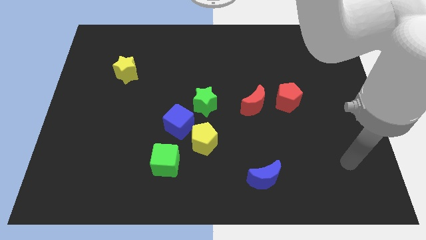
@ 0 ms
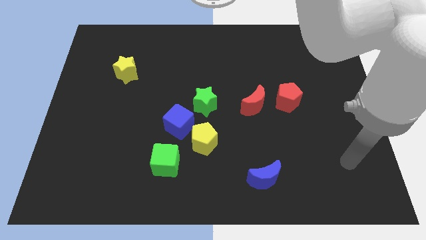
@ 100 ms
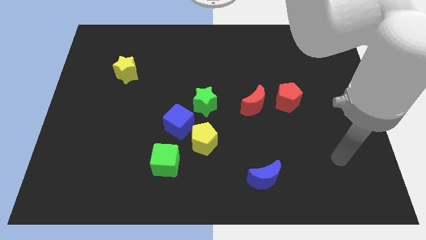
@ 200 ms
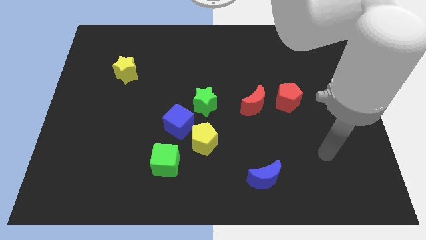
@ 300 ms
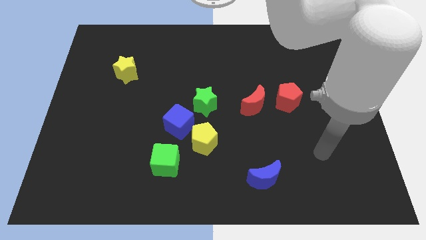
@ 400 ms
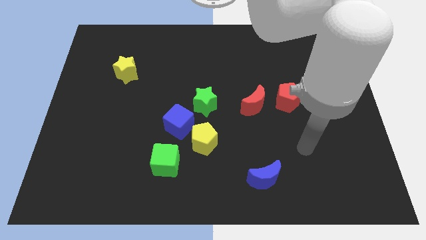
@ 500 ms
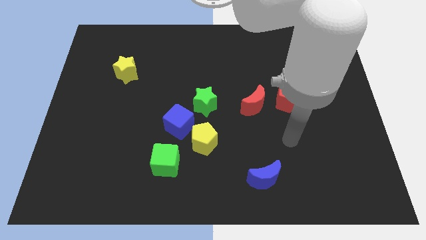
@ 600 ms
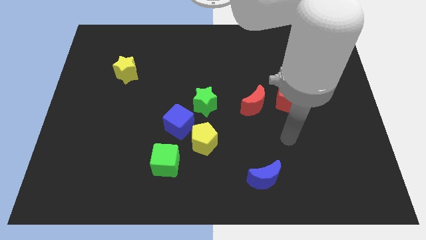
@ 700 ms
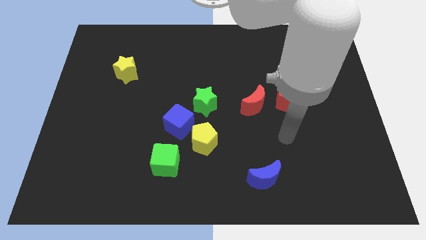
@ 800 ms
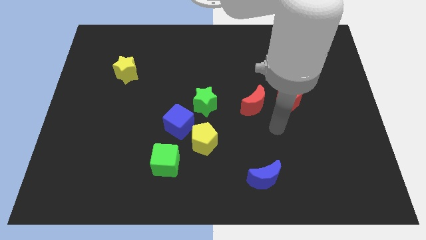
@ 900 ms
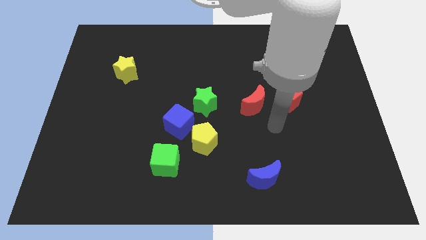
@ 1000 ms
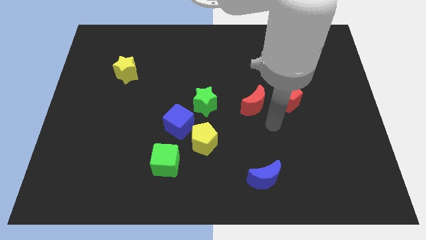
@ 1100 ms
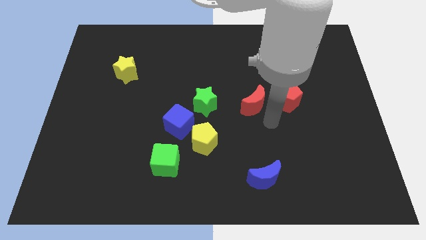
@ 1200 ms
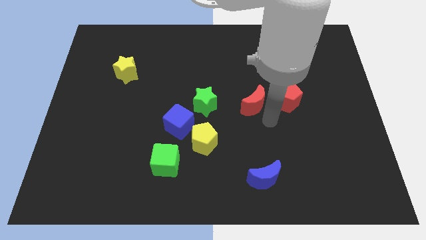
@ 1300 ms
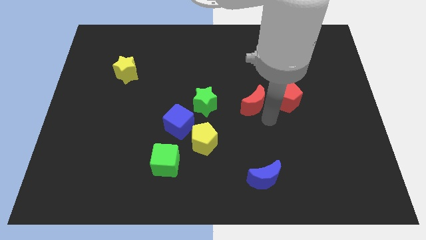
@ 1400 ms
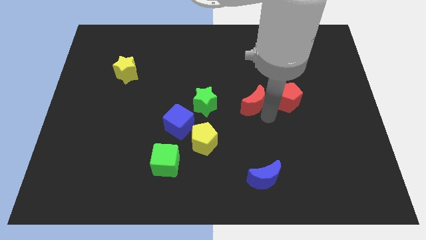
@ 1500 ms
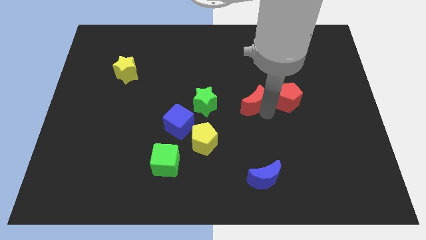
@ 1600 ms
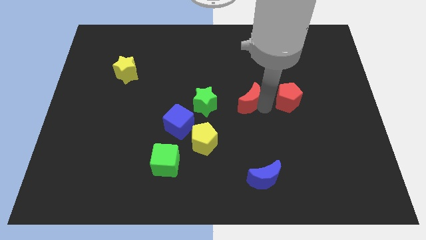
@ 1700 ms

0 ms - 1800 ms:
move your arm to the right of red moon

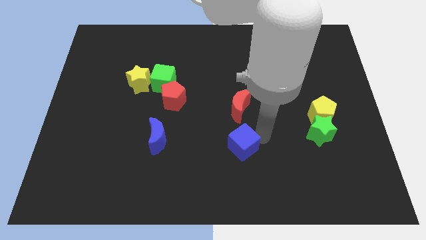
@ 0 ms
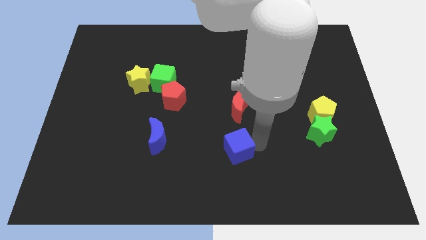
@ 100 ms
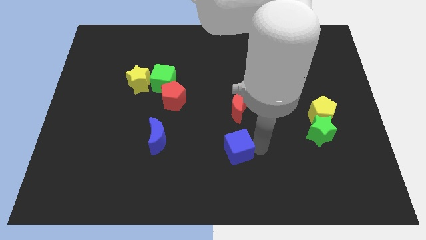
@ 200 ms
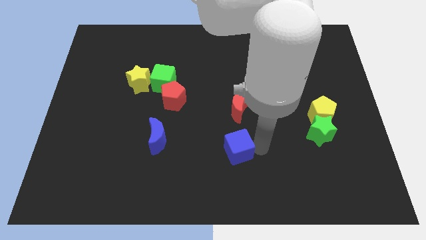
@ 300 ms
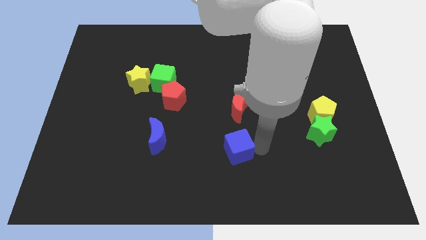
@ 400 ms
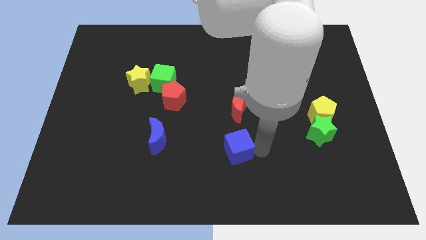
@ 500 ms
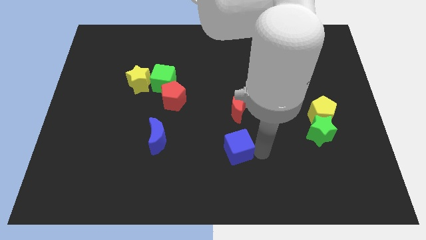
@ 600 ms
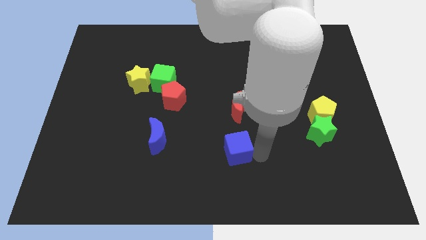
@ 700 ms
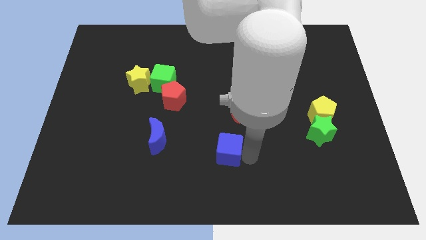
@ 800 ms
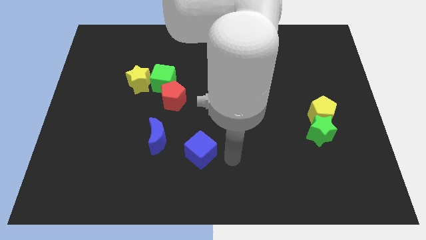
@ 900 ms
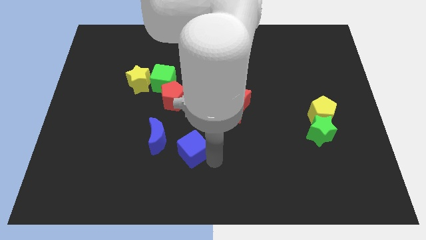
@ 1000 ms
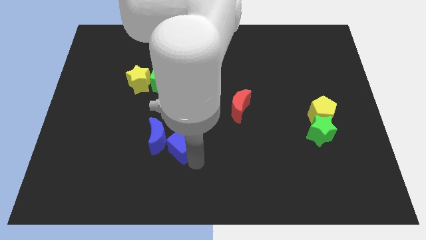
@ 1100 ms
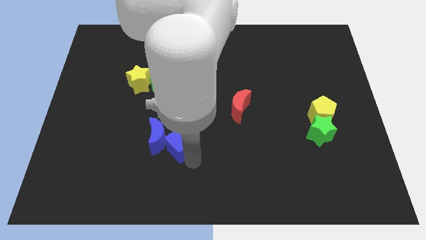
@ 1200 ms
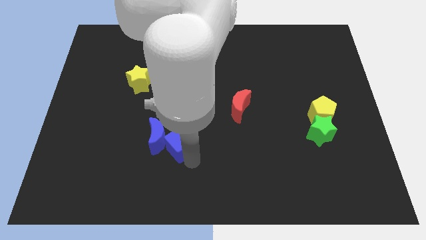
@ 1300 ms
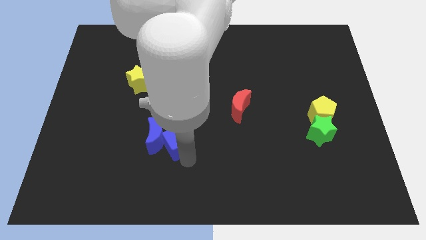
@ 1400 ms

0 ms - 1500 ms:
push the blue cube into the blue crescent

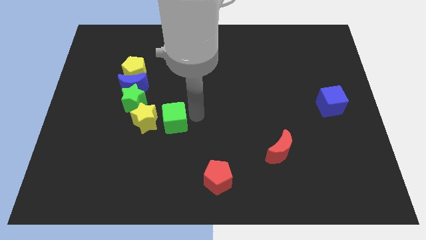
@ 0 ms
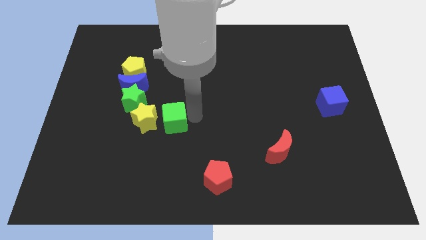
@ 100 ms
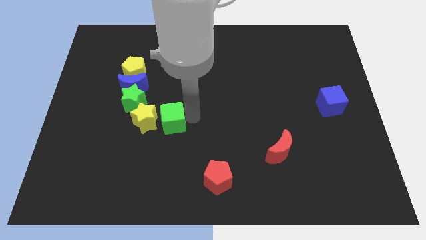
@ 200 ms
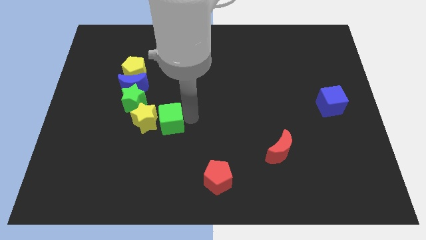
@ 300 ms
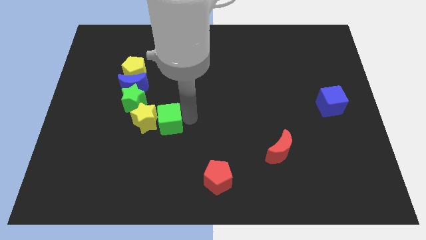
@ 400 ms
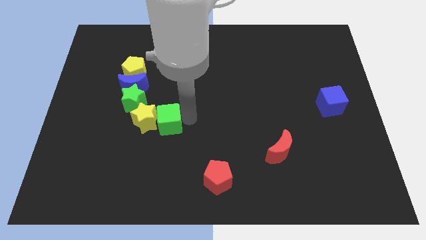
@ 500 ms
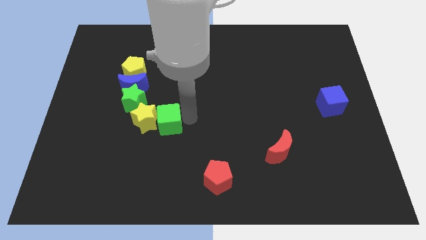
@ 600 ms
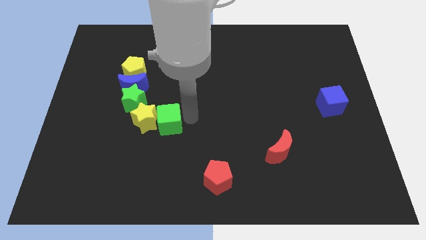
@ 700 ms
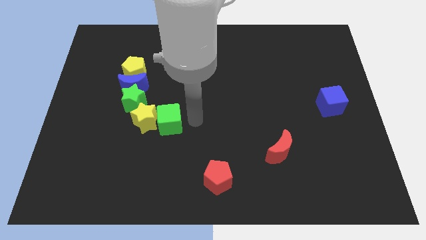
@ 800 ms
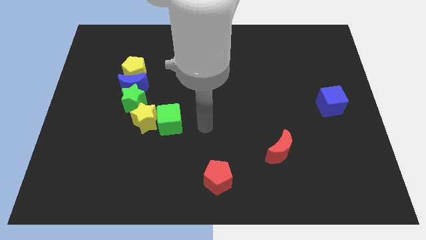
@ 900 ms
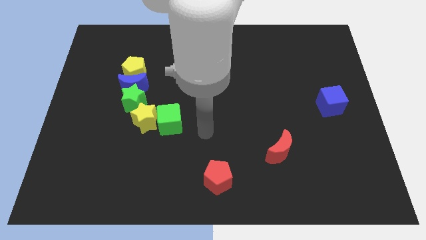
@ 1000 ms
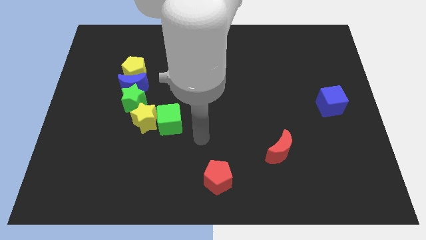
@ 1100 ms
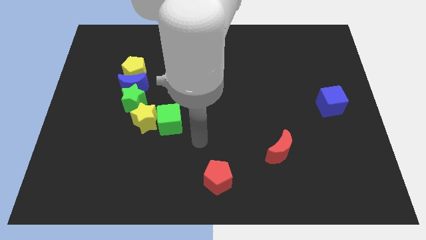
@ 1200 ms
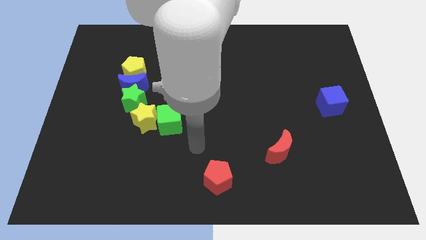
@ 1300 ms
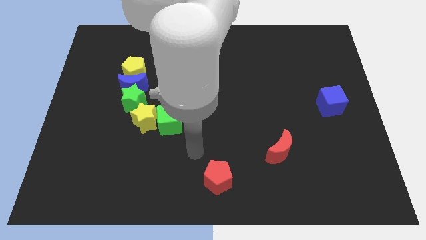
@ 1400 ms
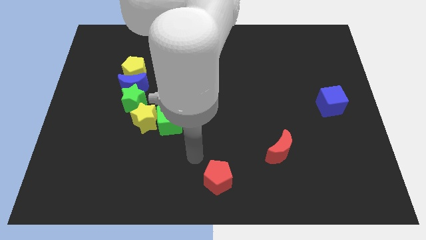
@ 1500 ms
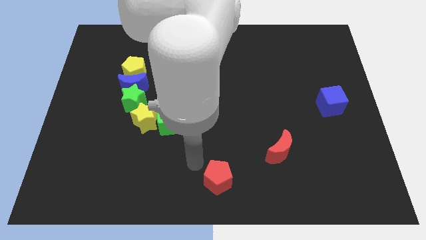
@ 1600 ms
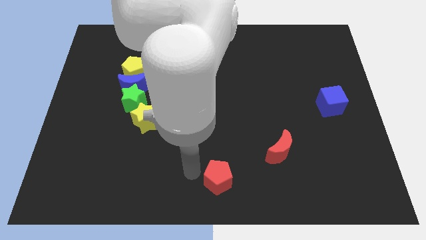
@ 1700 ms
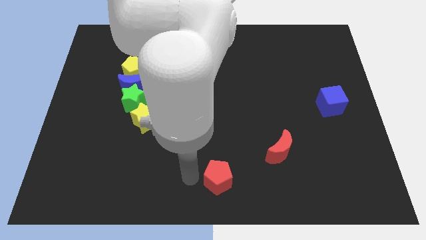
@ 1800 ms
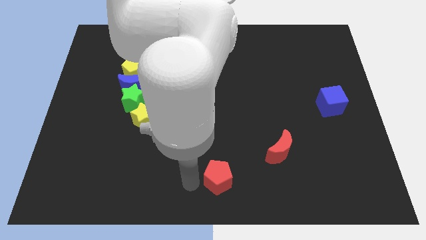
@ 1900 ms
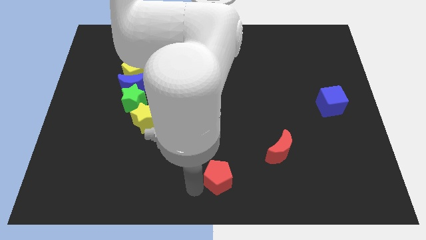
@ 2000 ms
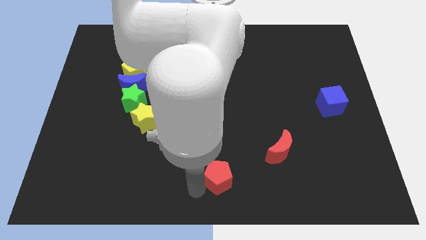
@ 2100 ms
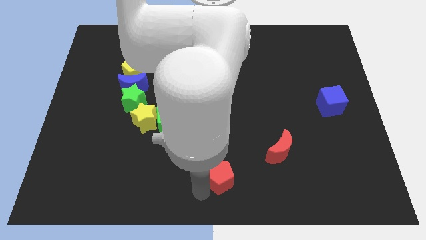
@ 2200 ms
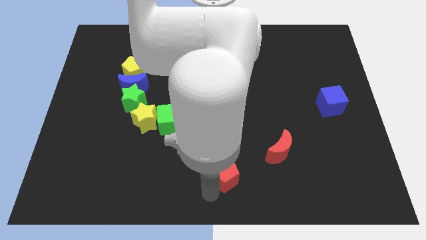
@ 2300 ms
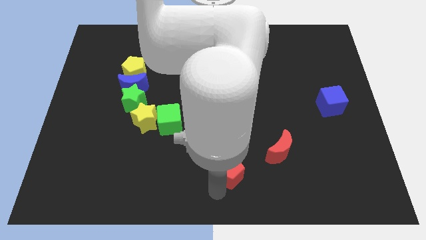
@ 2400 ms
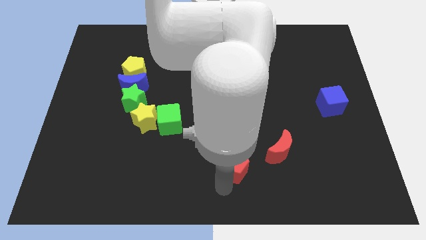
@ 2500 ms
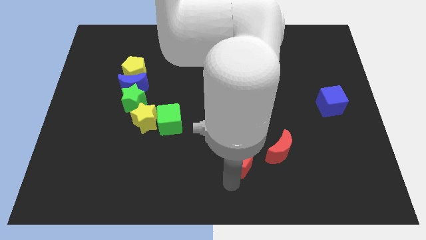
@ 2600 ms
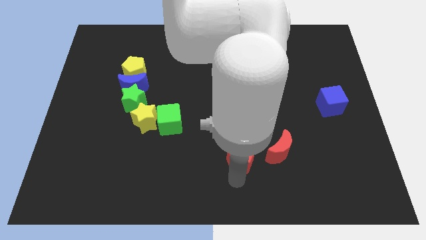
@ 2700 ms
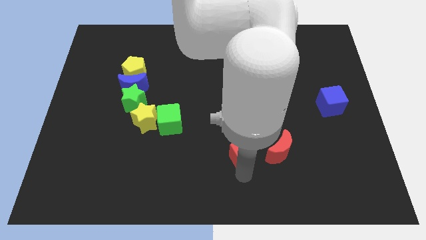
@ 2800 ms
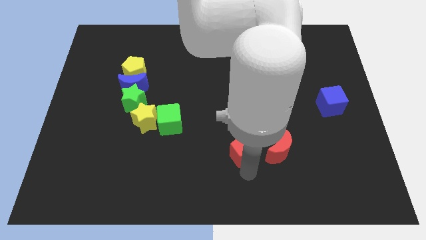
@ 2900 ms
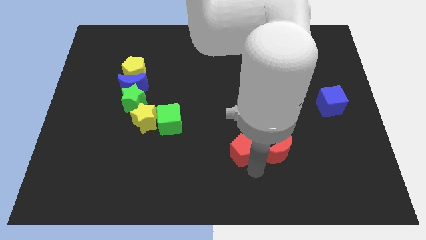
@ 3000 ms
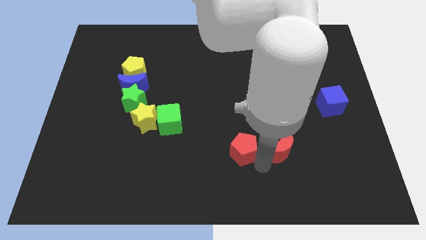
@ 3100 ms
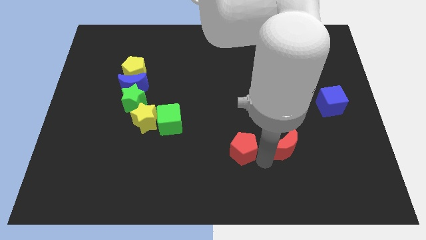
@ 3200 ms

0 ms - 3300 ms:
slide the red pentagon to the left of the red moon

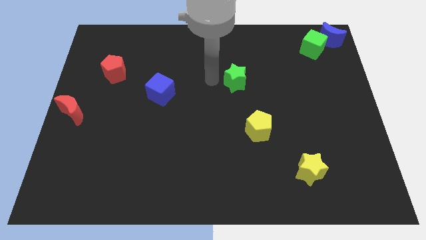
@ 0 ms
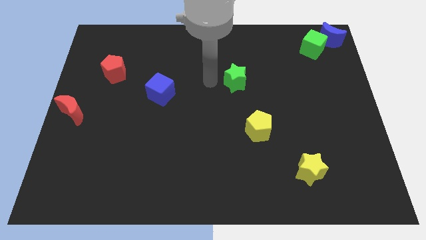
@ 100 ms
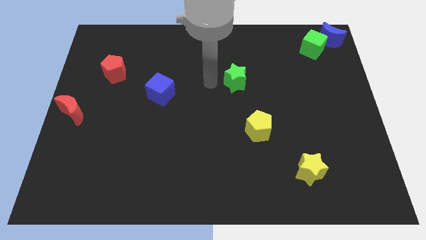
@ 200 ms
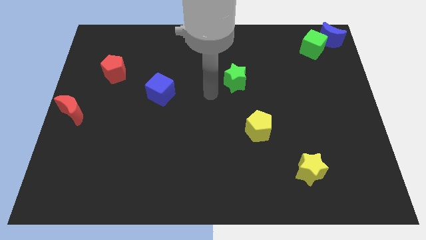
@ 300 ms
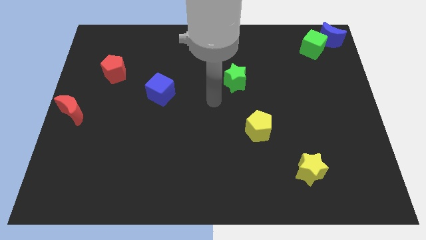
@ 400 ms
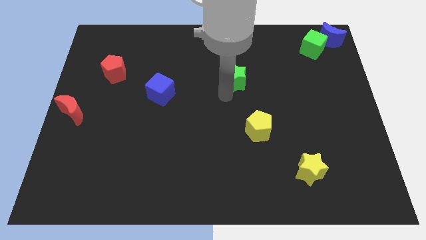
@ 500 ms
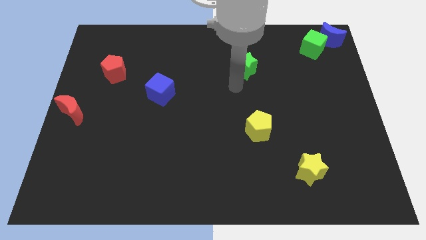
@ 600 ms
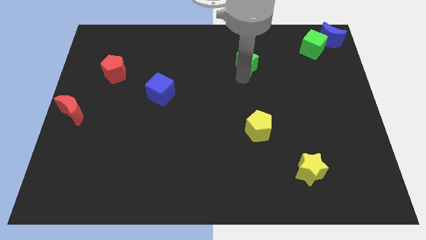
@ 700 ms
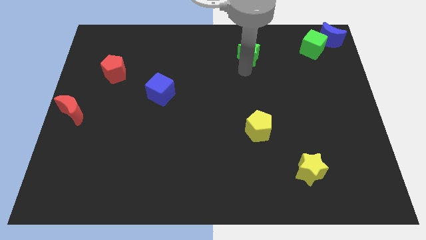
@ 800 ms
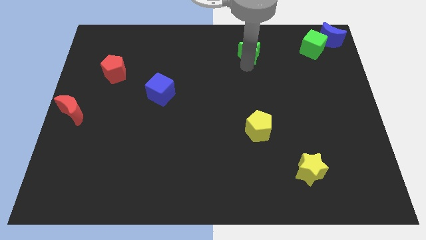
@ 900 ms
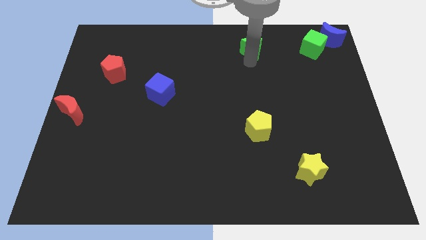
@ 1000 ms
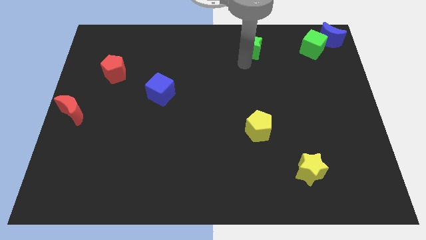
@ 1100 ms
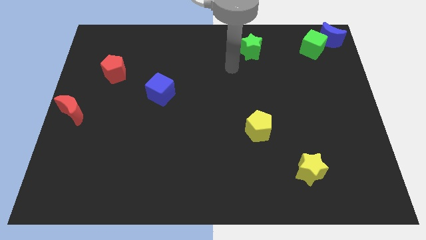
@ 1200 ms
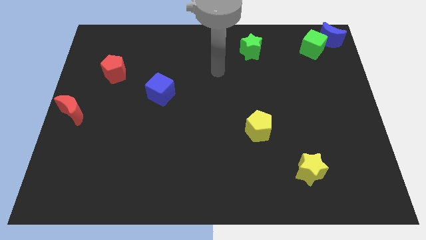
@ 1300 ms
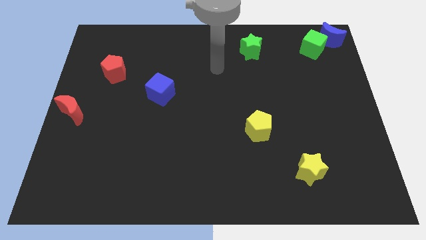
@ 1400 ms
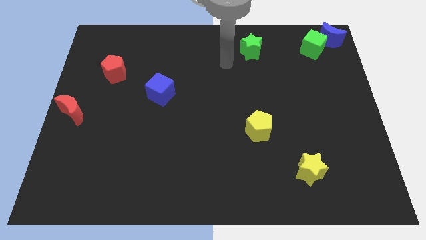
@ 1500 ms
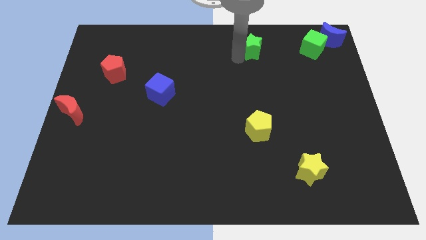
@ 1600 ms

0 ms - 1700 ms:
move the green star to the left of the green cube

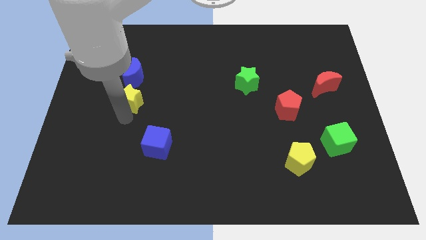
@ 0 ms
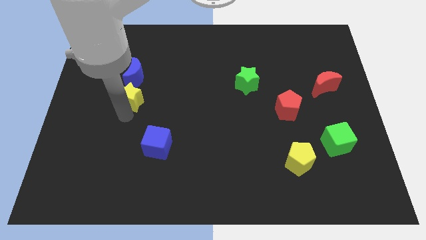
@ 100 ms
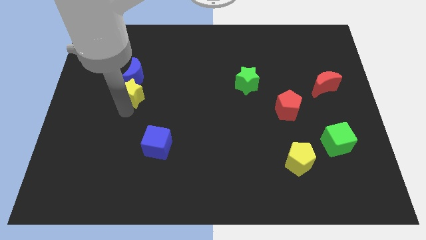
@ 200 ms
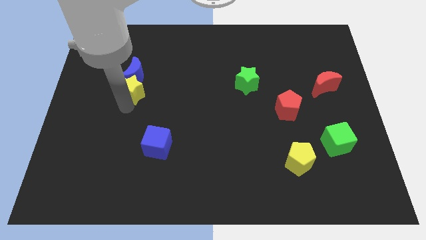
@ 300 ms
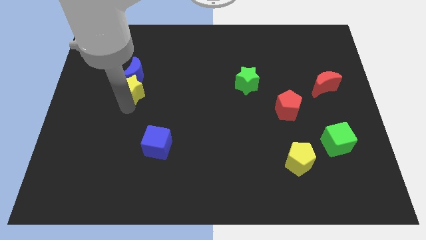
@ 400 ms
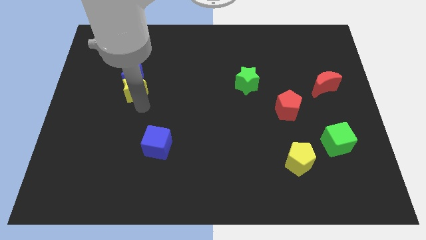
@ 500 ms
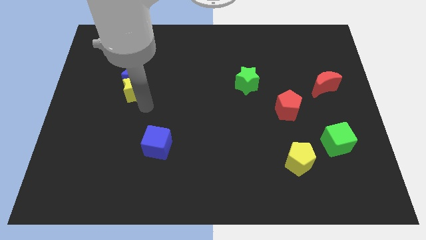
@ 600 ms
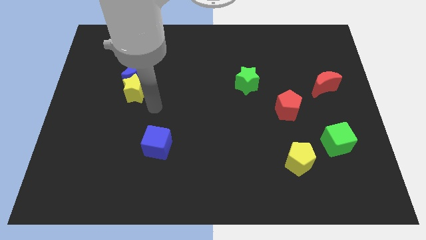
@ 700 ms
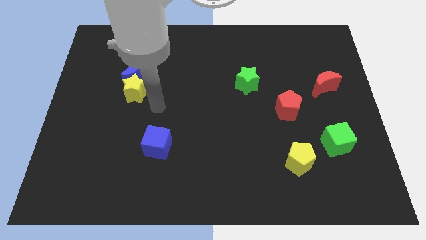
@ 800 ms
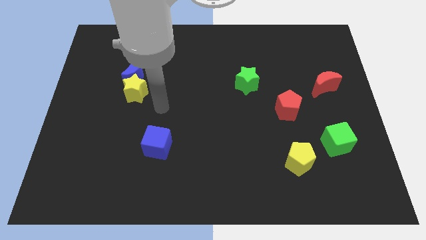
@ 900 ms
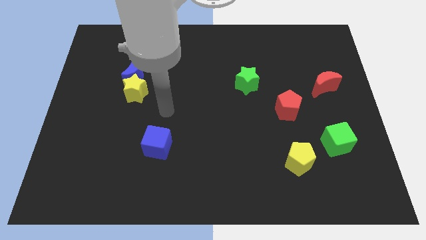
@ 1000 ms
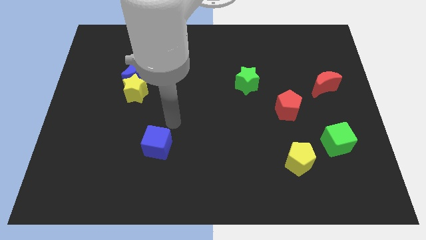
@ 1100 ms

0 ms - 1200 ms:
push yellow star into the blue crescent
